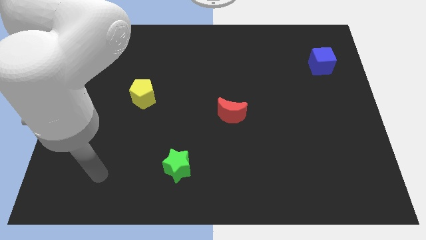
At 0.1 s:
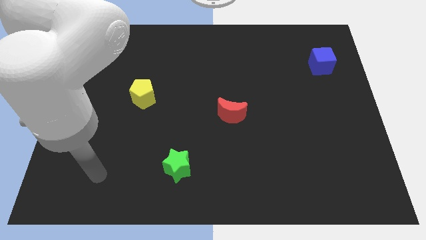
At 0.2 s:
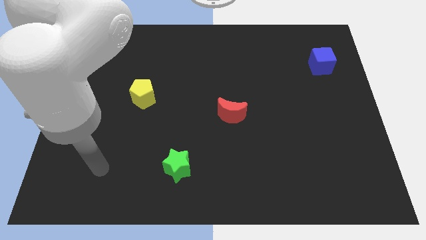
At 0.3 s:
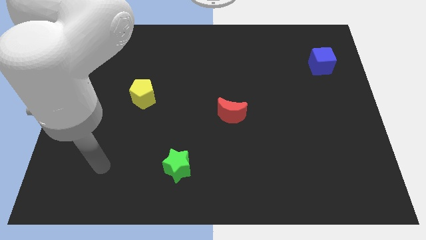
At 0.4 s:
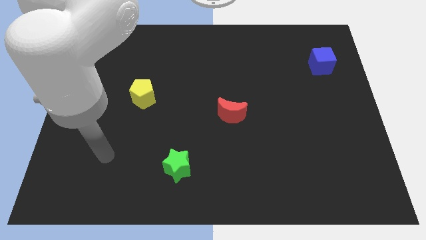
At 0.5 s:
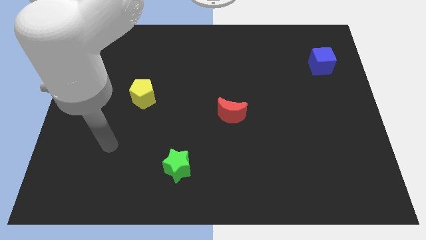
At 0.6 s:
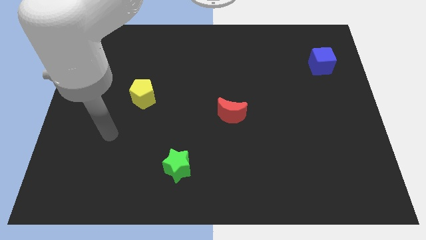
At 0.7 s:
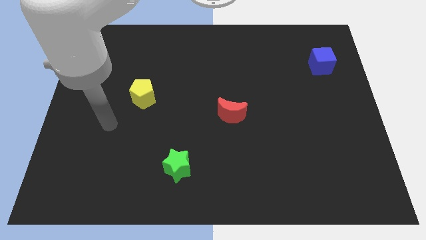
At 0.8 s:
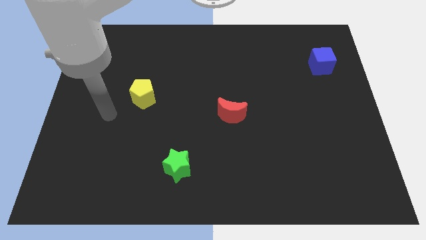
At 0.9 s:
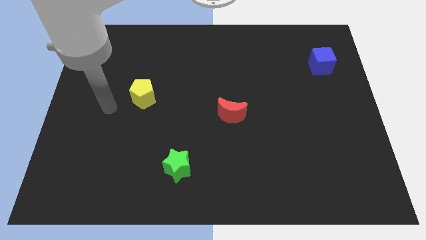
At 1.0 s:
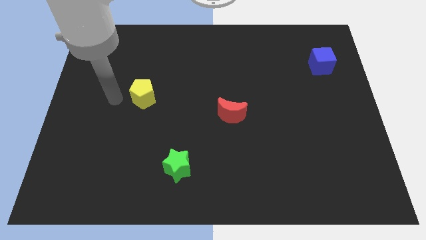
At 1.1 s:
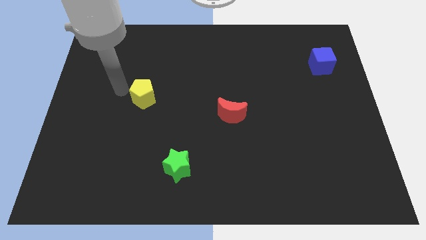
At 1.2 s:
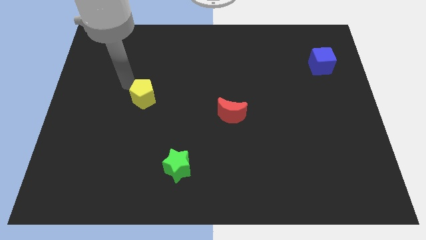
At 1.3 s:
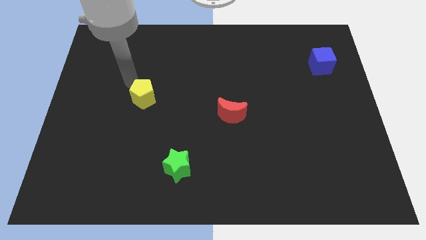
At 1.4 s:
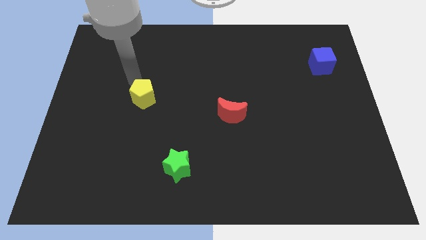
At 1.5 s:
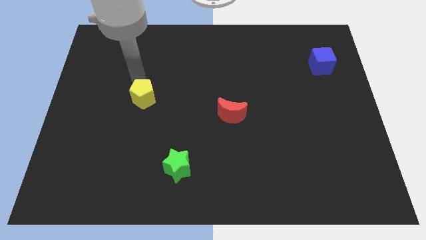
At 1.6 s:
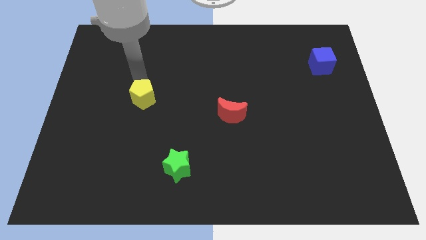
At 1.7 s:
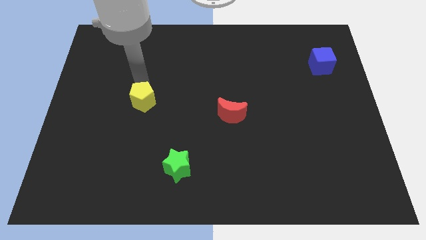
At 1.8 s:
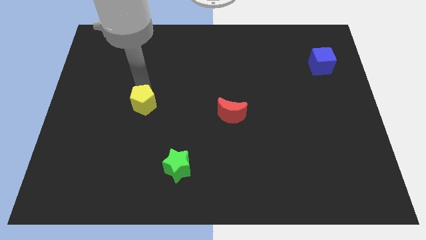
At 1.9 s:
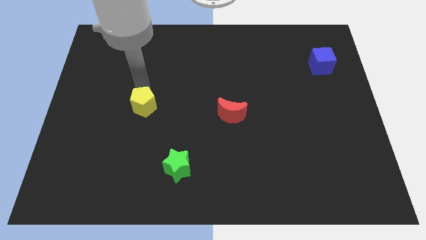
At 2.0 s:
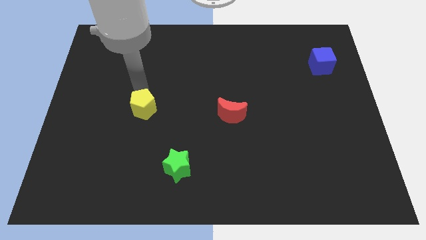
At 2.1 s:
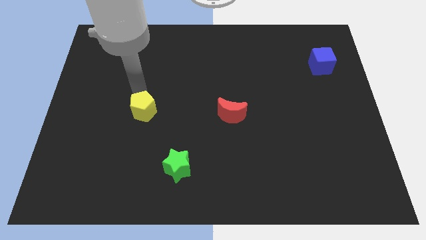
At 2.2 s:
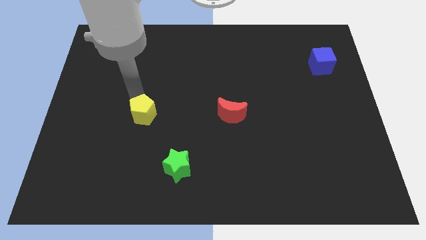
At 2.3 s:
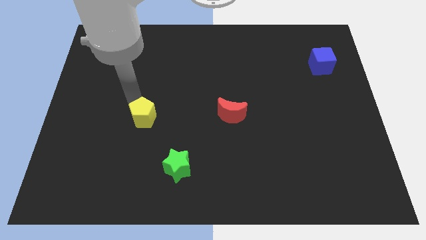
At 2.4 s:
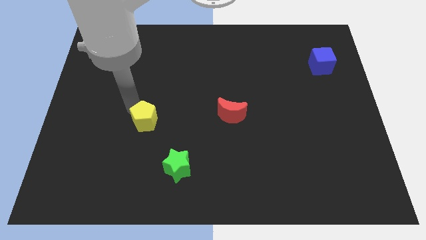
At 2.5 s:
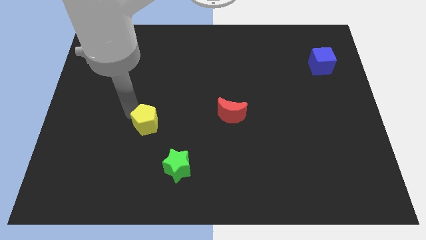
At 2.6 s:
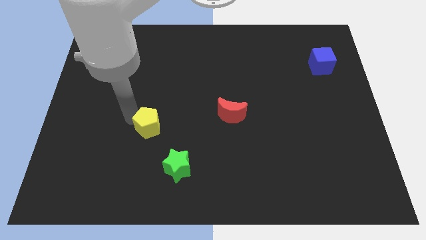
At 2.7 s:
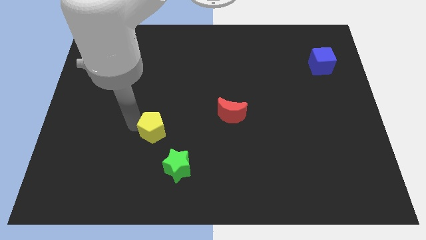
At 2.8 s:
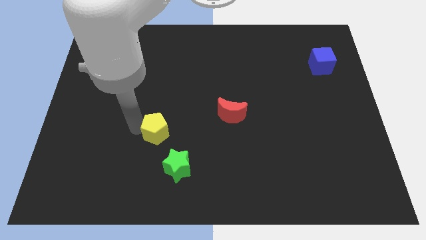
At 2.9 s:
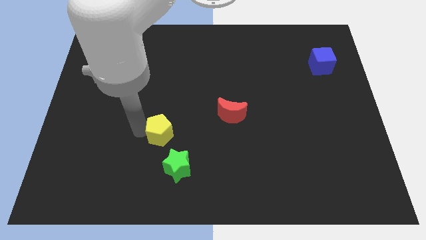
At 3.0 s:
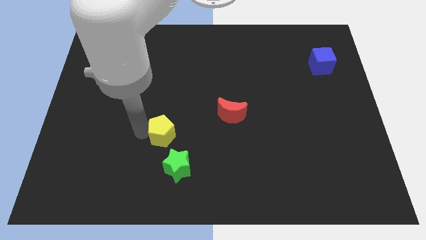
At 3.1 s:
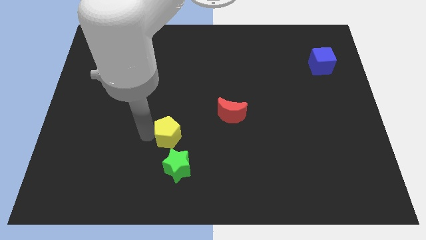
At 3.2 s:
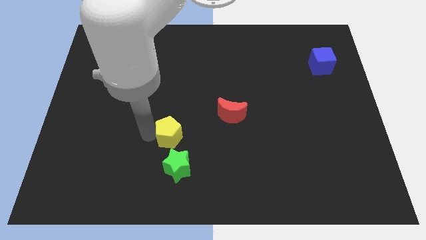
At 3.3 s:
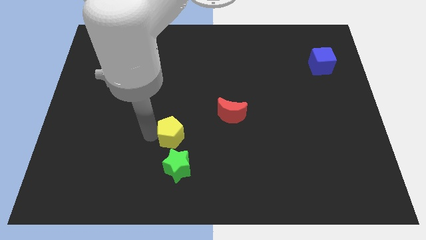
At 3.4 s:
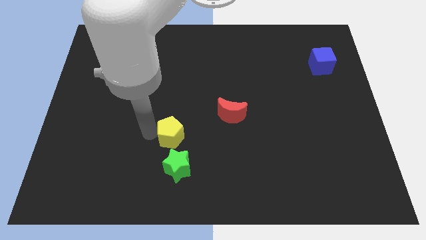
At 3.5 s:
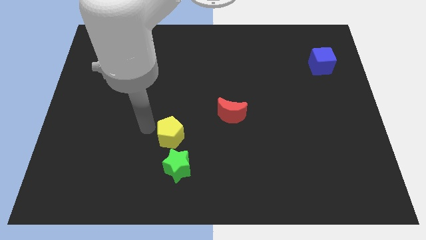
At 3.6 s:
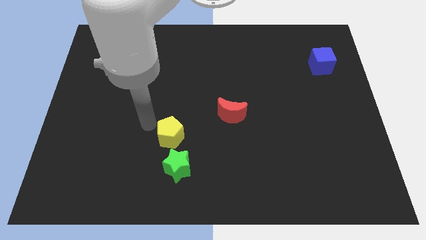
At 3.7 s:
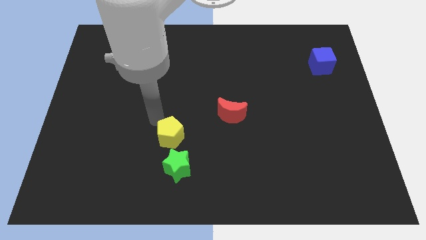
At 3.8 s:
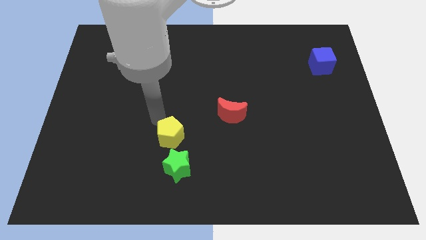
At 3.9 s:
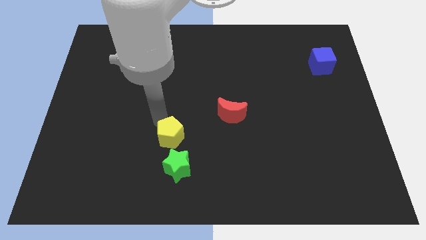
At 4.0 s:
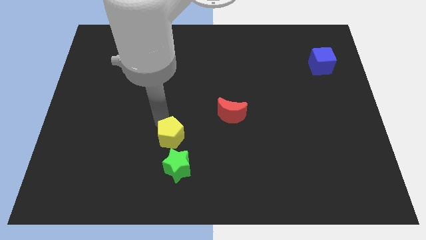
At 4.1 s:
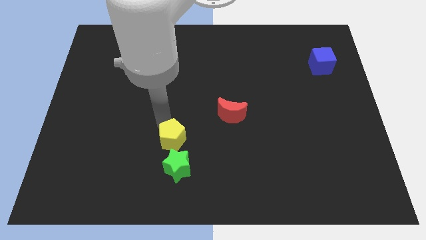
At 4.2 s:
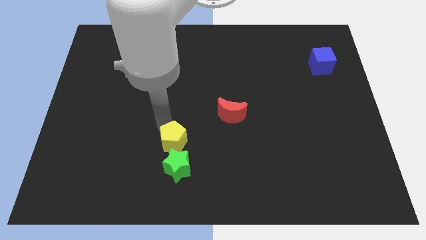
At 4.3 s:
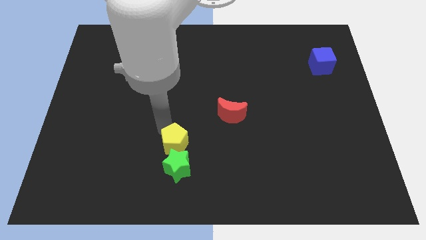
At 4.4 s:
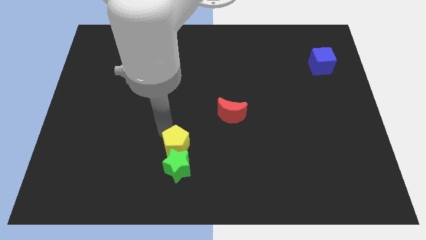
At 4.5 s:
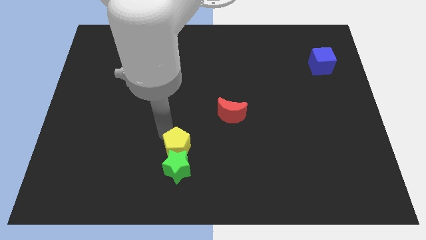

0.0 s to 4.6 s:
move the yellow block close to the green star

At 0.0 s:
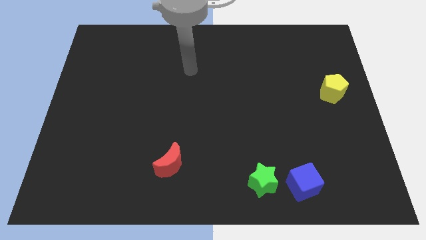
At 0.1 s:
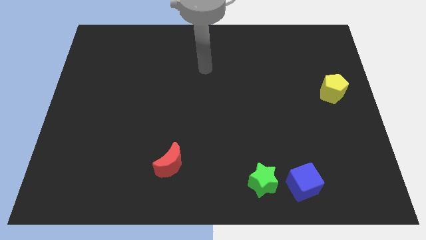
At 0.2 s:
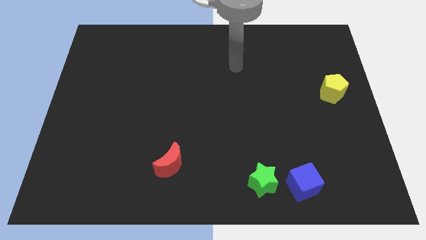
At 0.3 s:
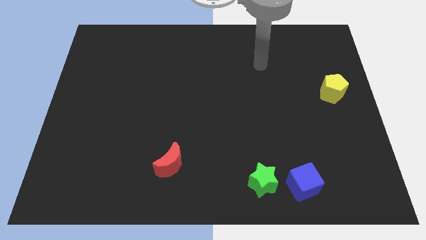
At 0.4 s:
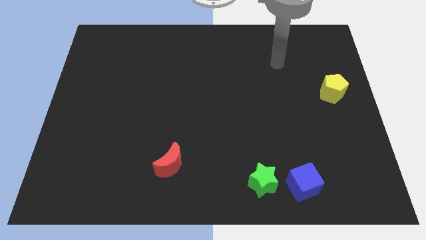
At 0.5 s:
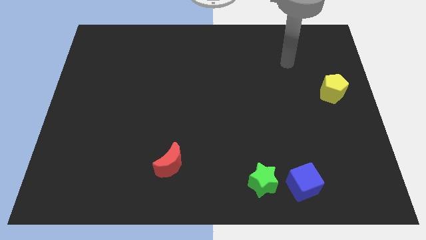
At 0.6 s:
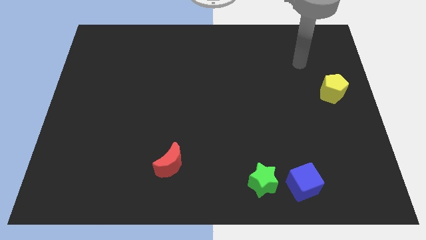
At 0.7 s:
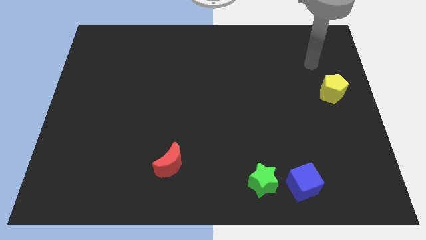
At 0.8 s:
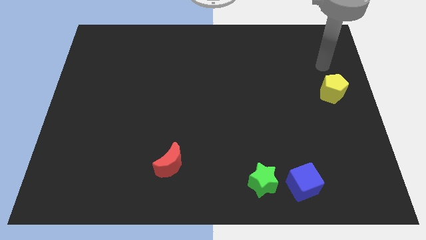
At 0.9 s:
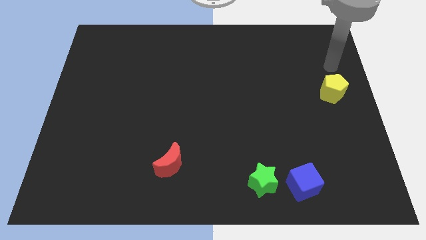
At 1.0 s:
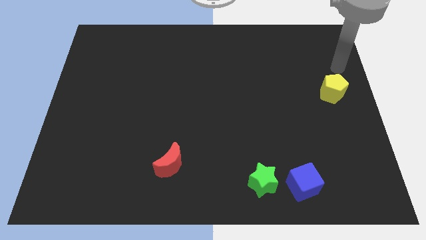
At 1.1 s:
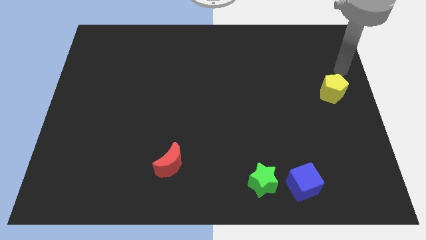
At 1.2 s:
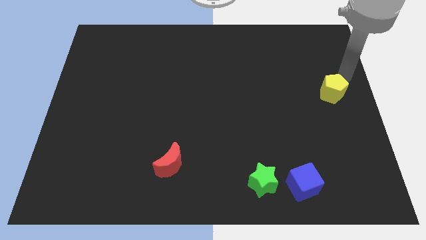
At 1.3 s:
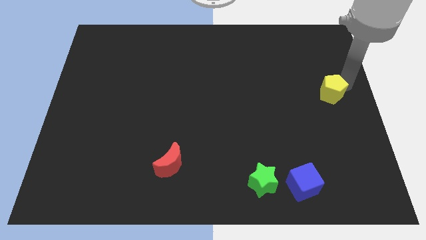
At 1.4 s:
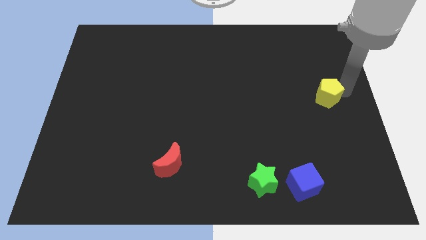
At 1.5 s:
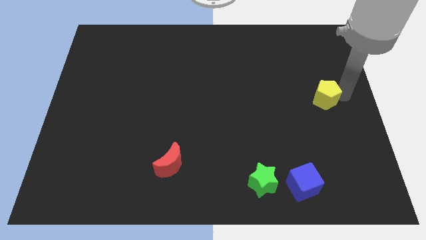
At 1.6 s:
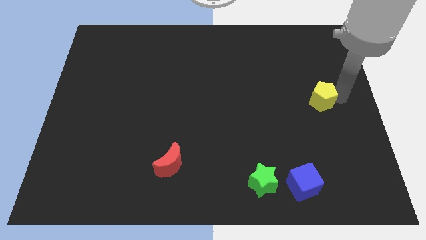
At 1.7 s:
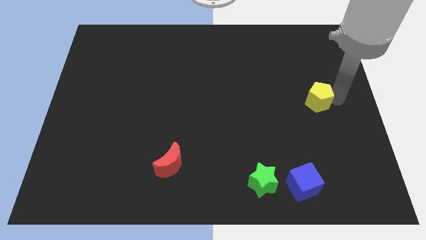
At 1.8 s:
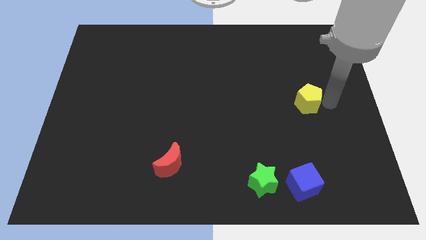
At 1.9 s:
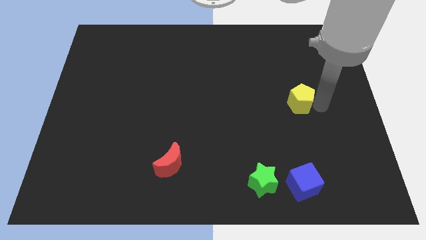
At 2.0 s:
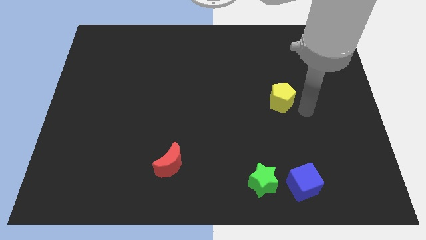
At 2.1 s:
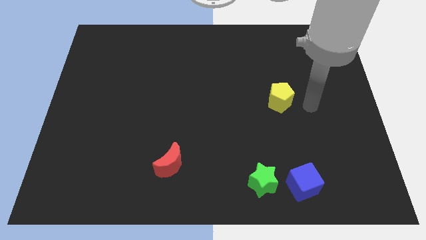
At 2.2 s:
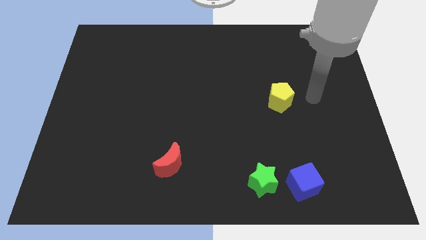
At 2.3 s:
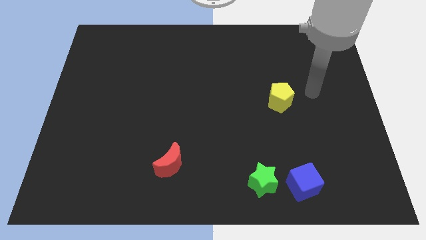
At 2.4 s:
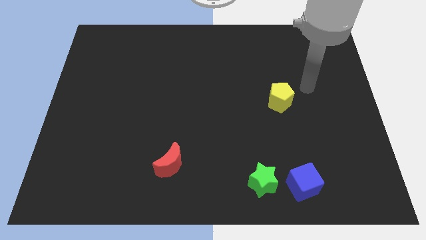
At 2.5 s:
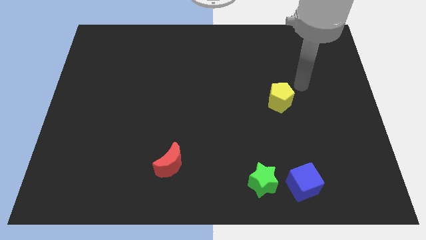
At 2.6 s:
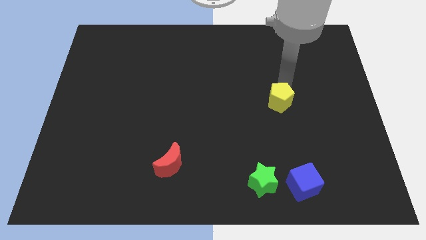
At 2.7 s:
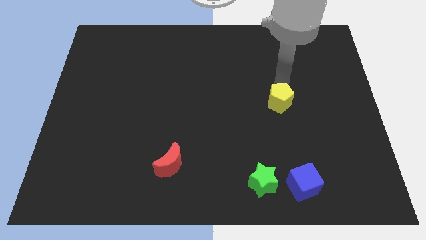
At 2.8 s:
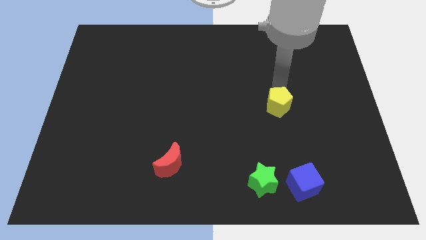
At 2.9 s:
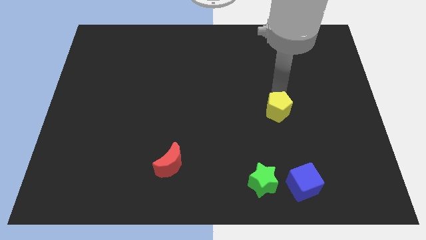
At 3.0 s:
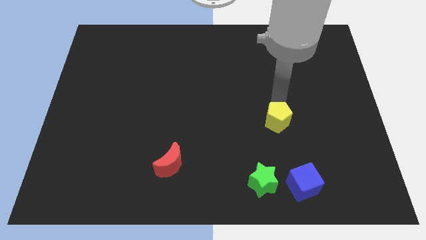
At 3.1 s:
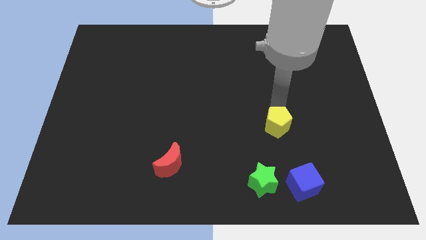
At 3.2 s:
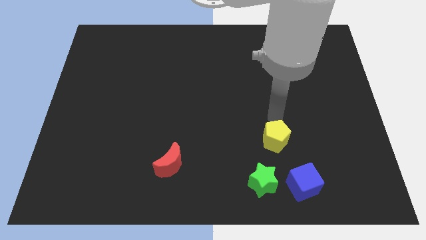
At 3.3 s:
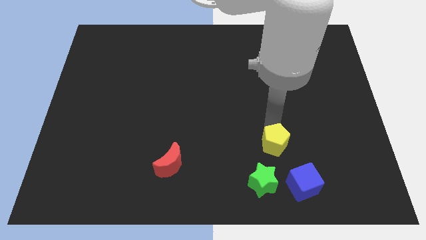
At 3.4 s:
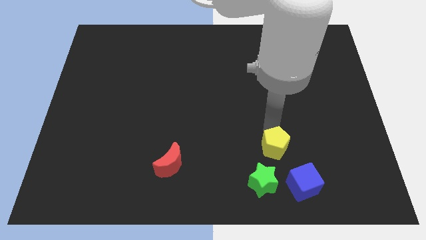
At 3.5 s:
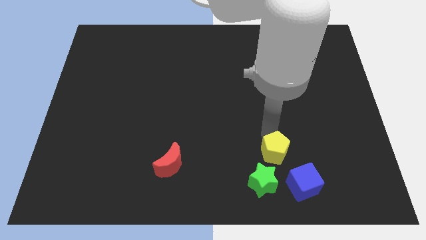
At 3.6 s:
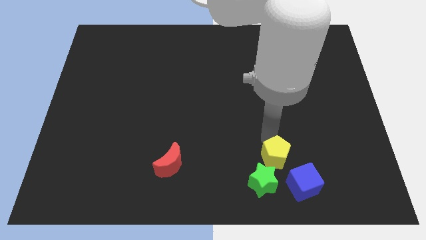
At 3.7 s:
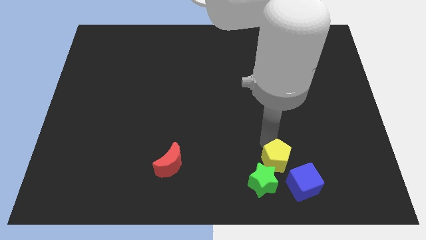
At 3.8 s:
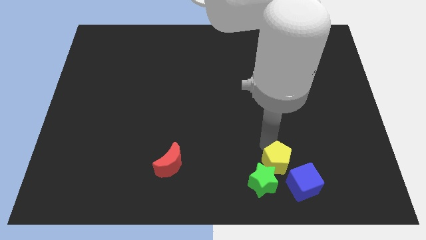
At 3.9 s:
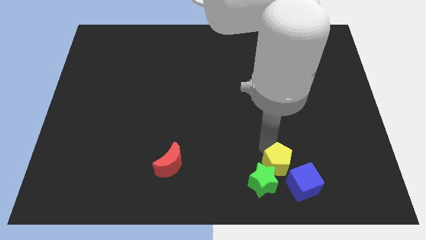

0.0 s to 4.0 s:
move the yellow block next to the green star
